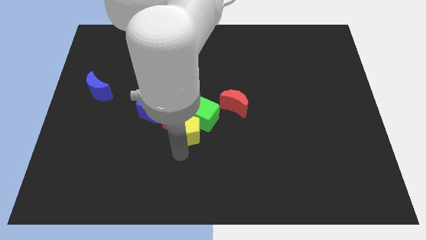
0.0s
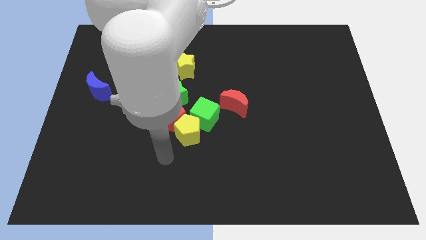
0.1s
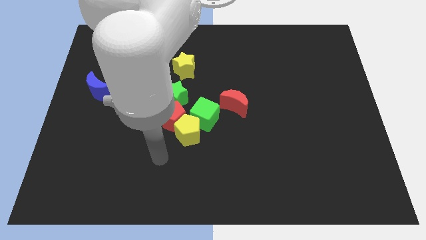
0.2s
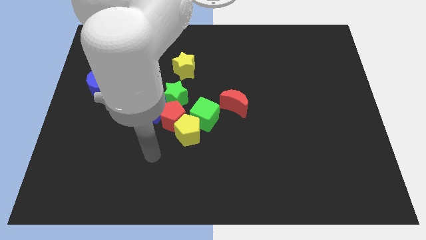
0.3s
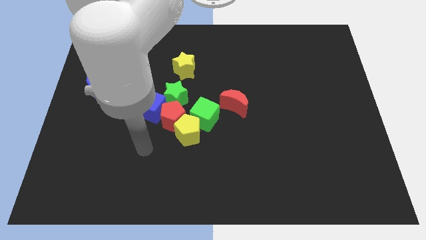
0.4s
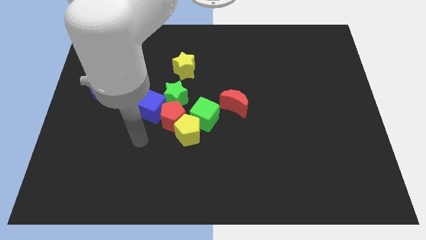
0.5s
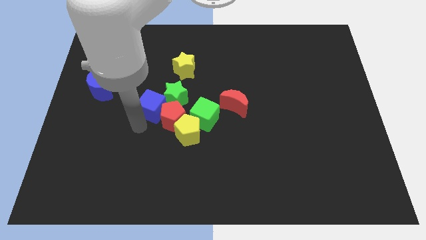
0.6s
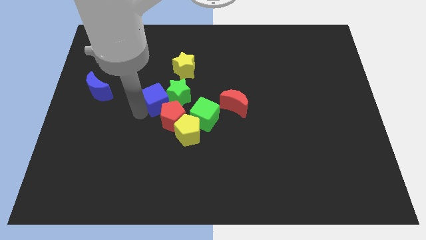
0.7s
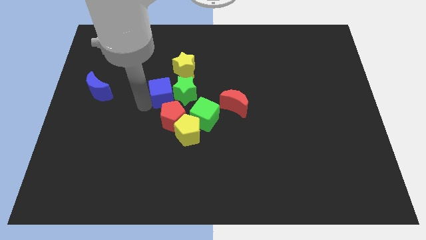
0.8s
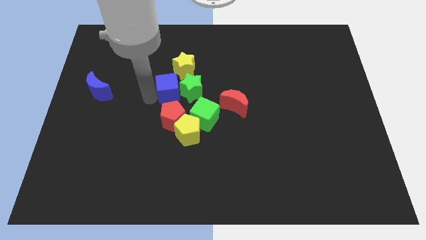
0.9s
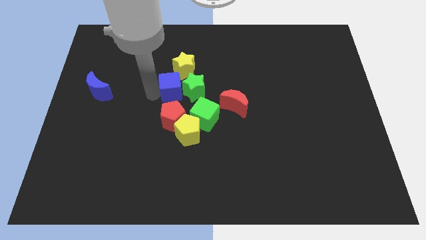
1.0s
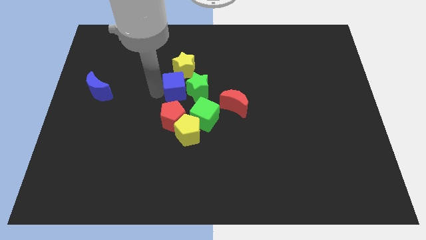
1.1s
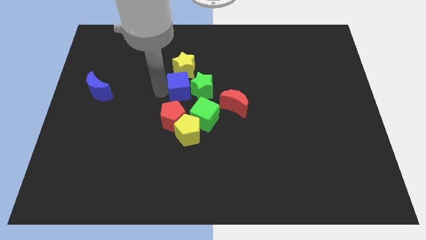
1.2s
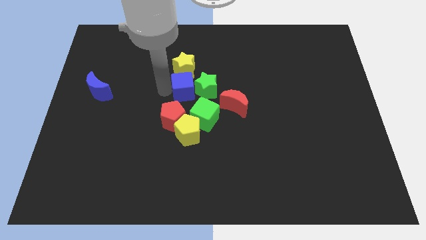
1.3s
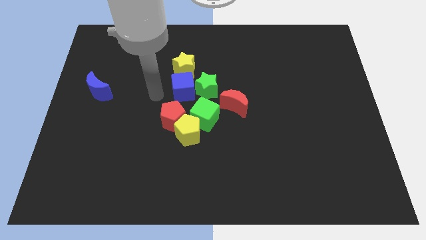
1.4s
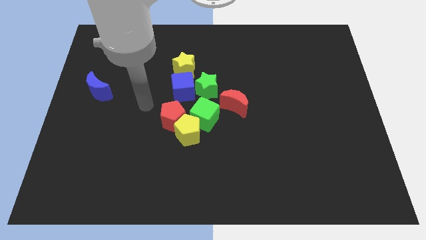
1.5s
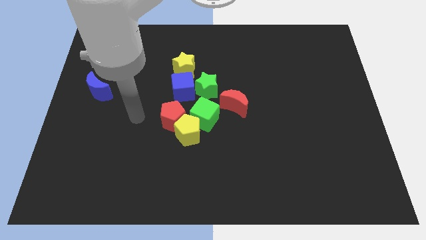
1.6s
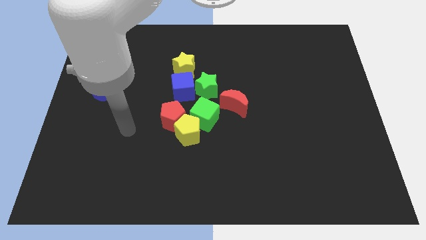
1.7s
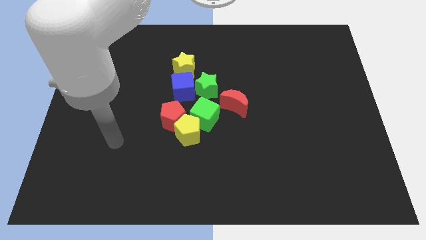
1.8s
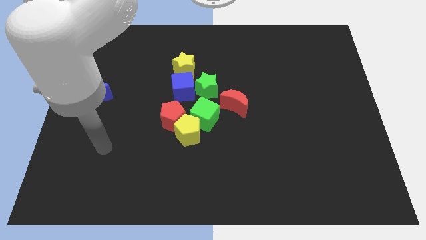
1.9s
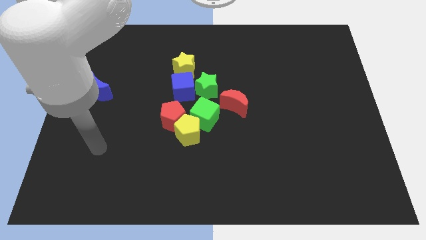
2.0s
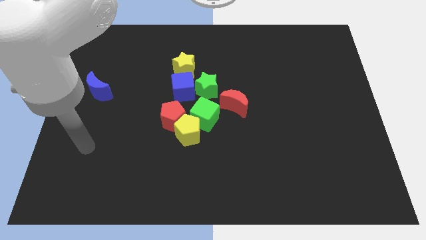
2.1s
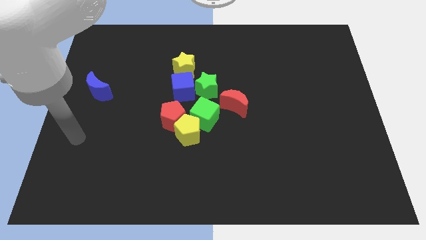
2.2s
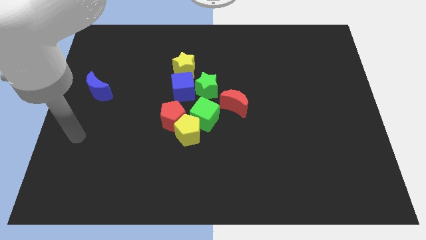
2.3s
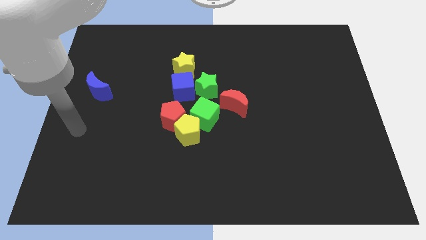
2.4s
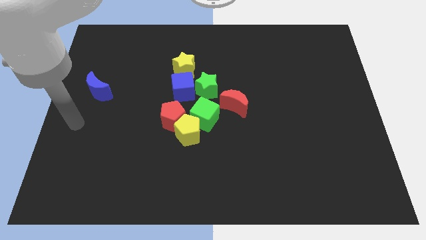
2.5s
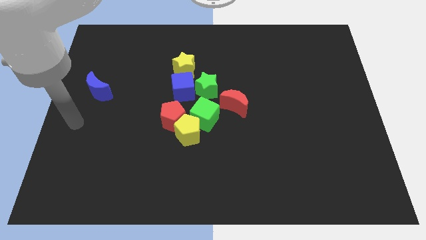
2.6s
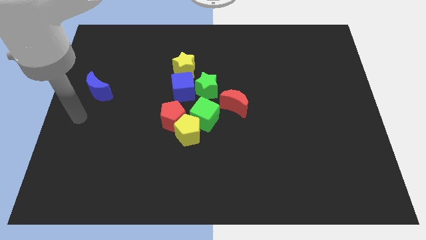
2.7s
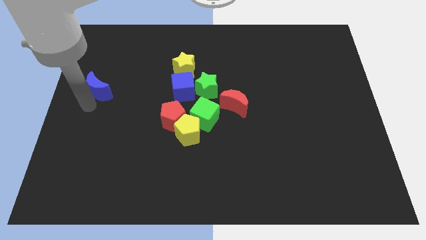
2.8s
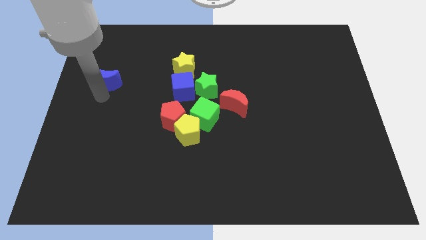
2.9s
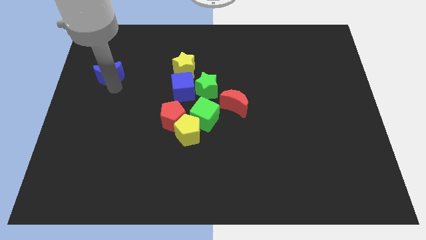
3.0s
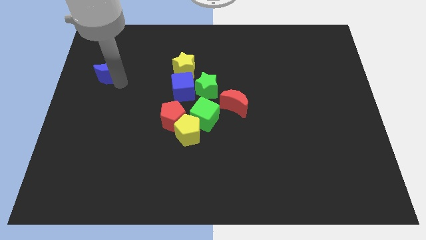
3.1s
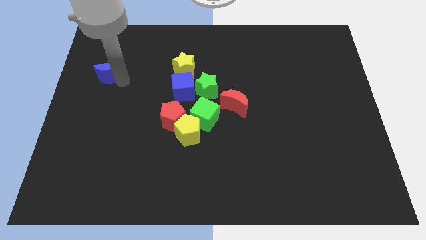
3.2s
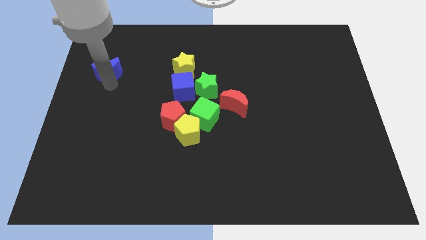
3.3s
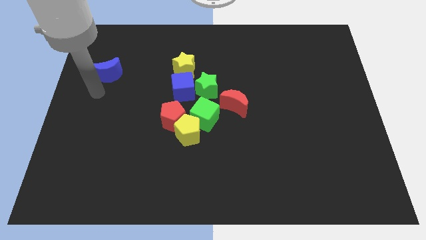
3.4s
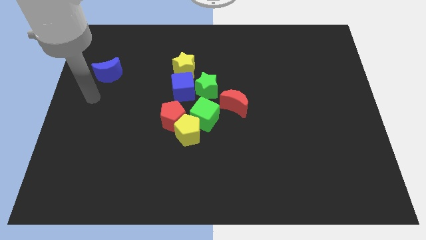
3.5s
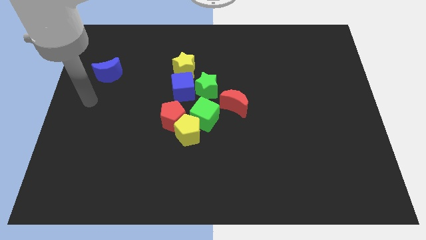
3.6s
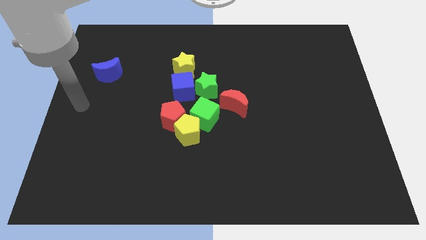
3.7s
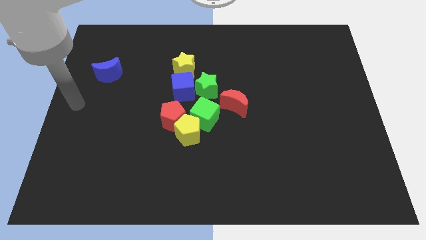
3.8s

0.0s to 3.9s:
move the blue crescent slightly to the top of the board

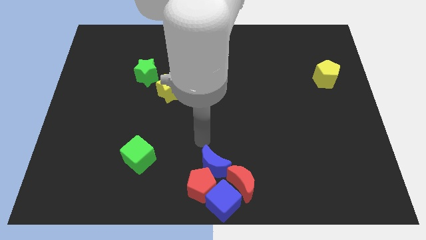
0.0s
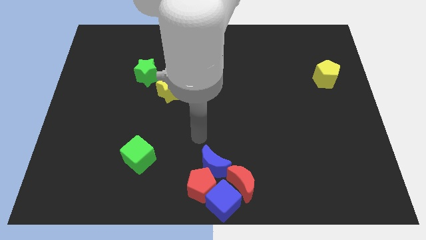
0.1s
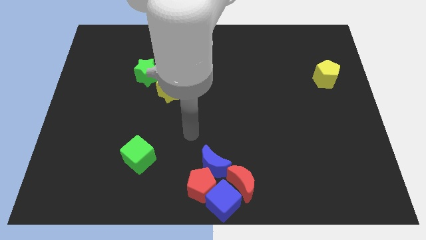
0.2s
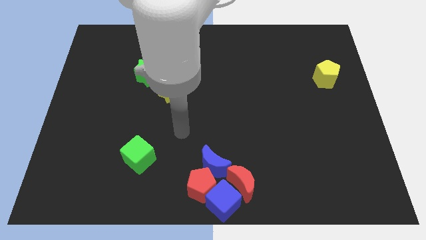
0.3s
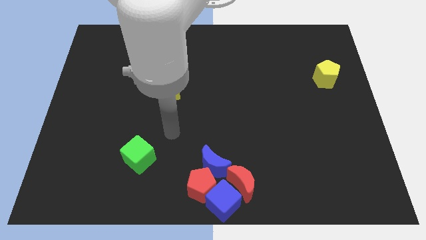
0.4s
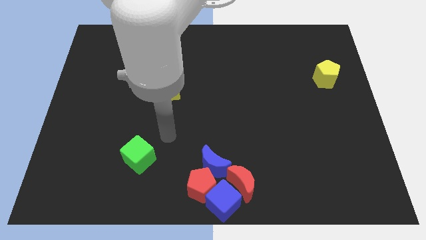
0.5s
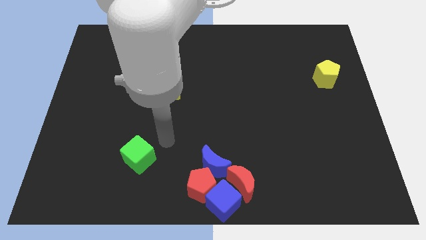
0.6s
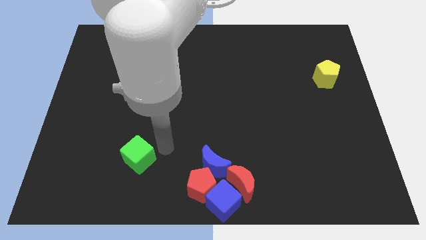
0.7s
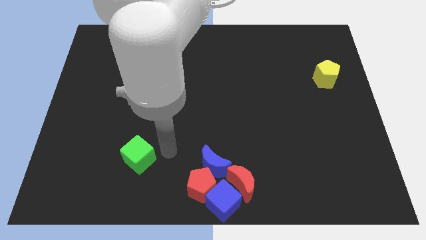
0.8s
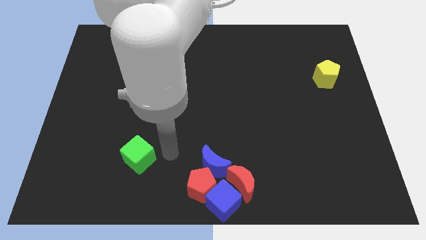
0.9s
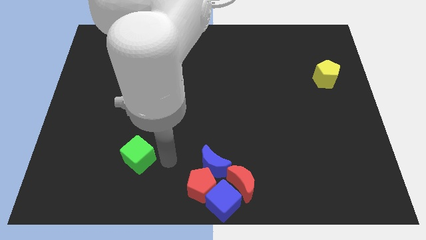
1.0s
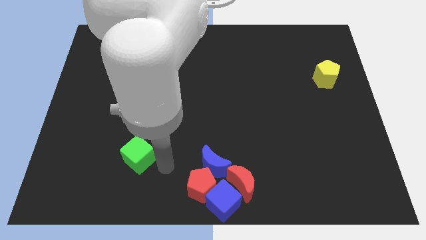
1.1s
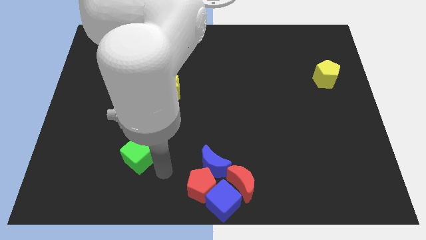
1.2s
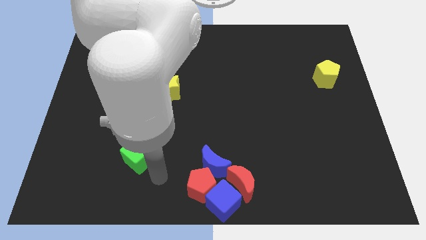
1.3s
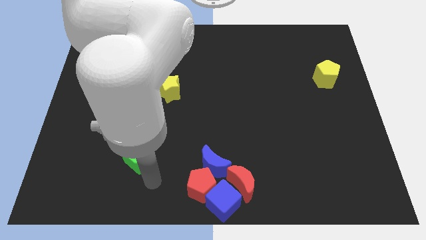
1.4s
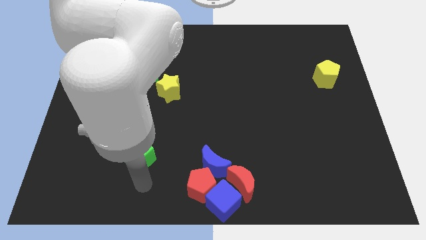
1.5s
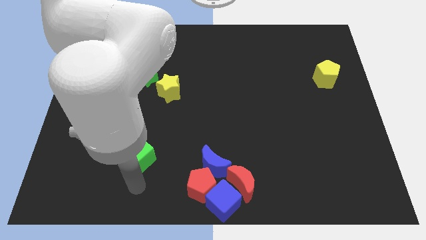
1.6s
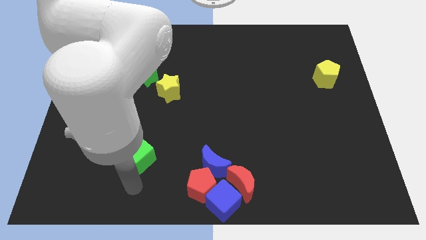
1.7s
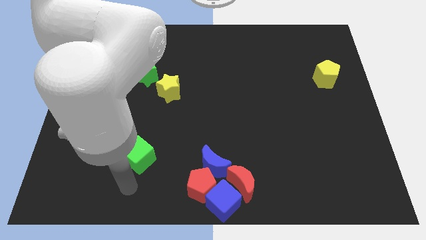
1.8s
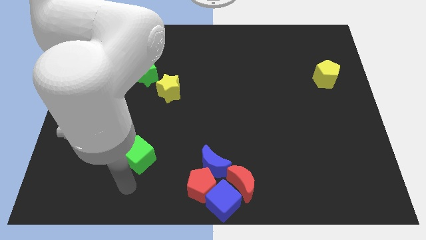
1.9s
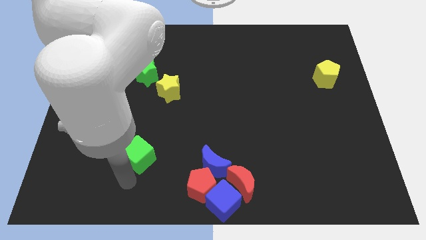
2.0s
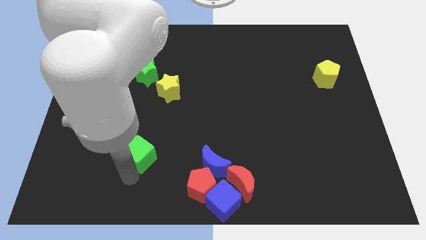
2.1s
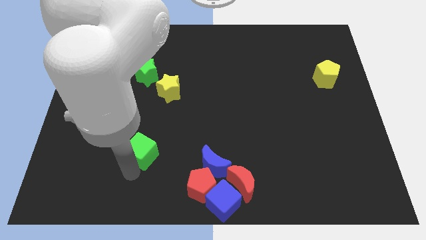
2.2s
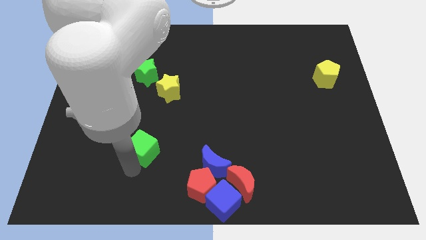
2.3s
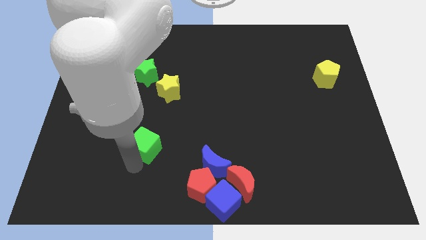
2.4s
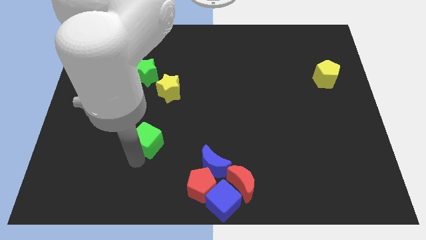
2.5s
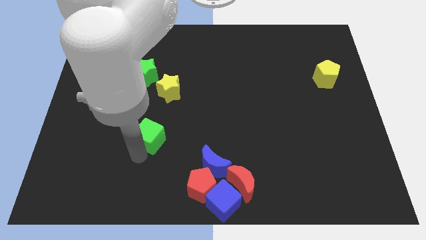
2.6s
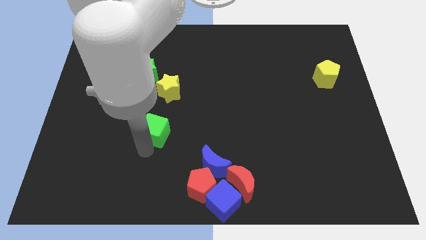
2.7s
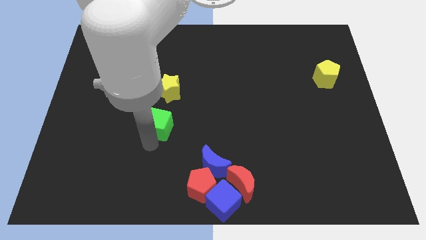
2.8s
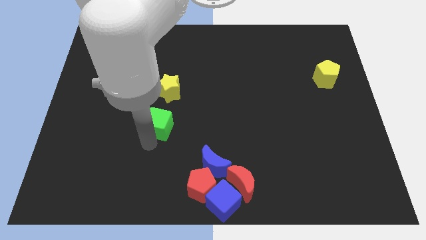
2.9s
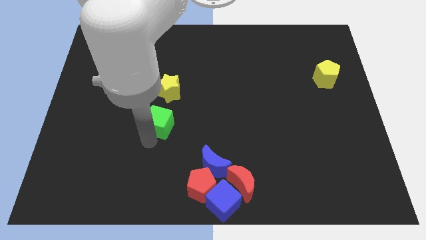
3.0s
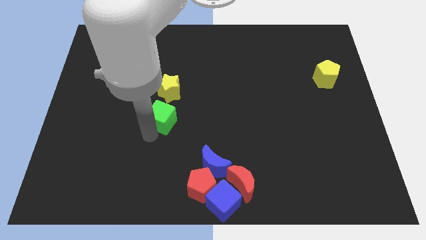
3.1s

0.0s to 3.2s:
move the green cube to the bottom of the yellow star

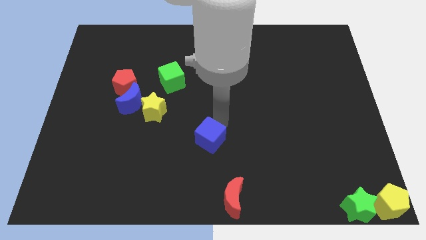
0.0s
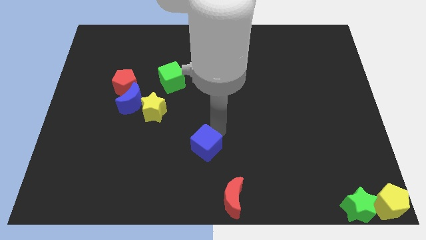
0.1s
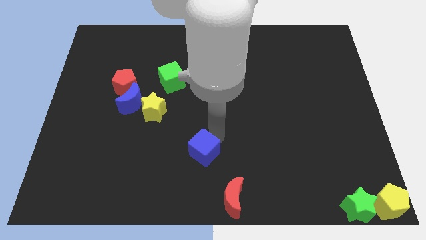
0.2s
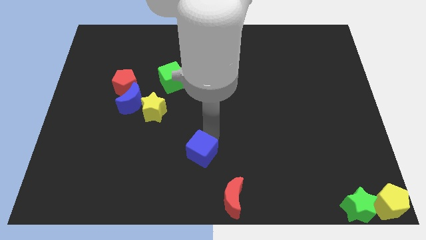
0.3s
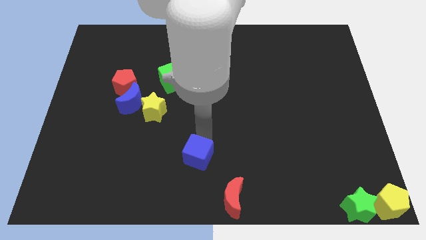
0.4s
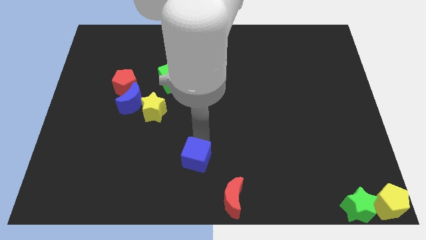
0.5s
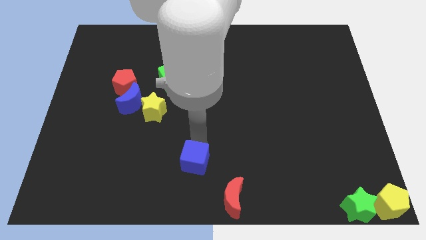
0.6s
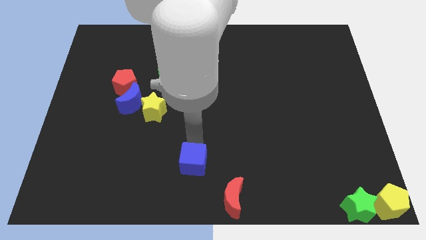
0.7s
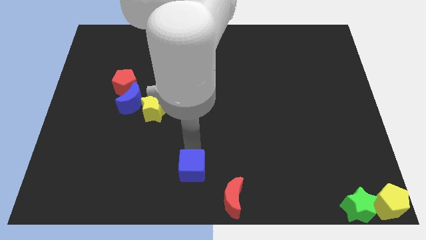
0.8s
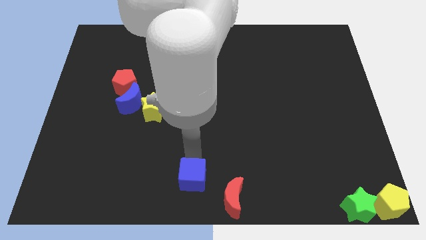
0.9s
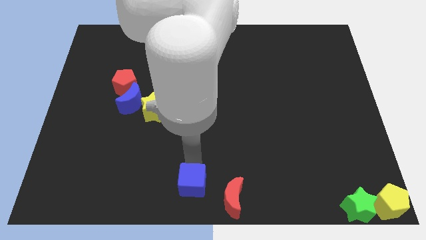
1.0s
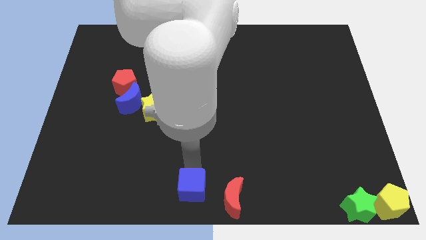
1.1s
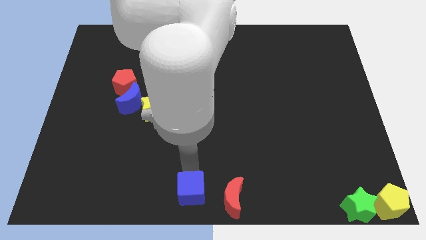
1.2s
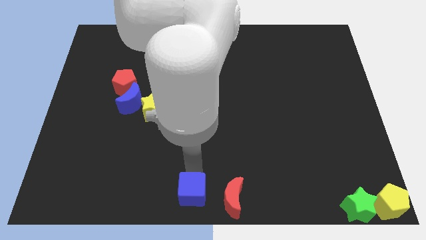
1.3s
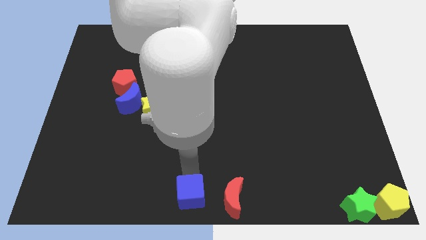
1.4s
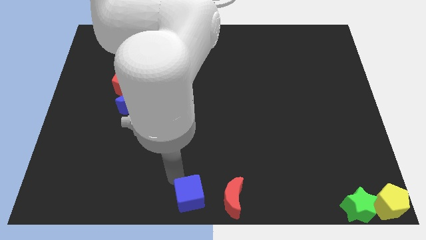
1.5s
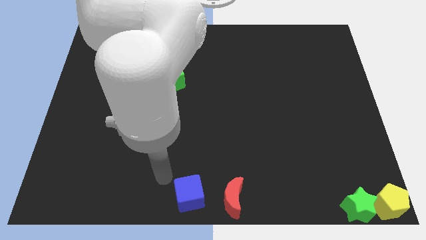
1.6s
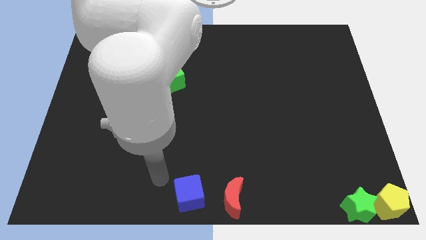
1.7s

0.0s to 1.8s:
place blue cube to the left of red moon
